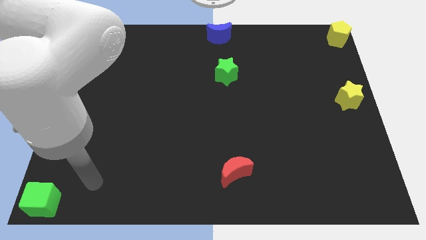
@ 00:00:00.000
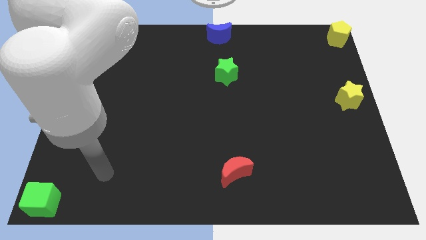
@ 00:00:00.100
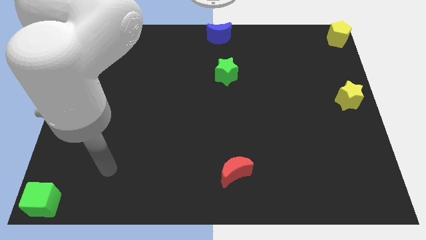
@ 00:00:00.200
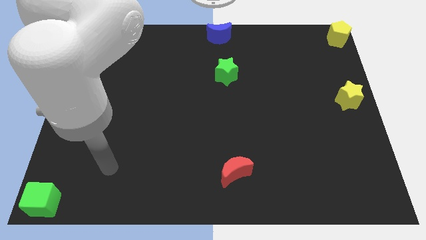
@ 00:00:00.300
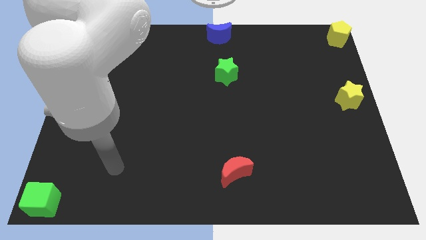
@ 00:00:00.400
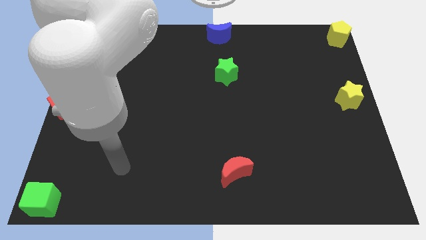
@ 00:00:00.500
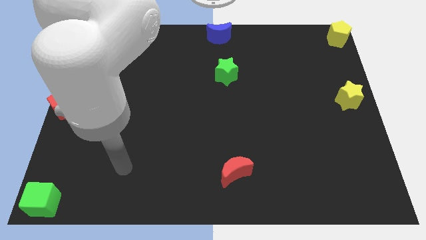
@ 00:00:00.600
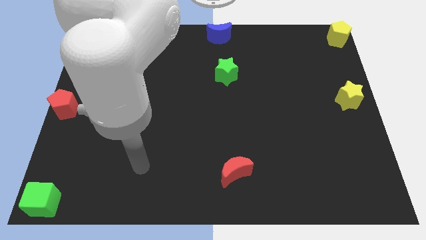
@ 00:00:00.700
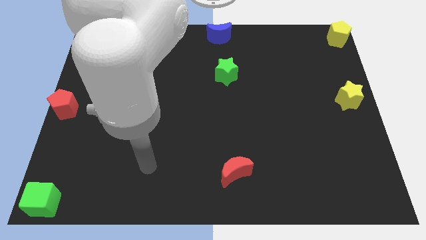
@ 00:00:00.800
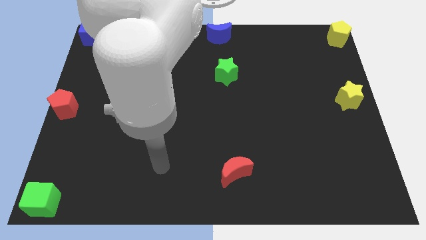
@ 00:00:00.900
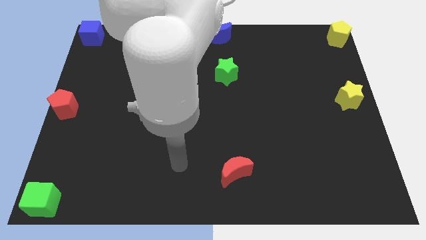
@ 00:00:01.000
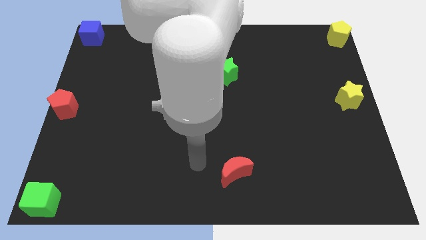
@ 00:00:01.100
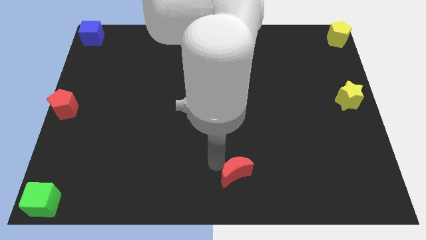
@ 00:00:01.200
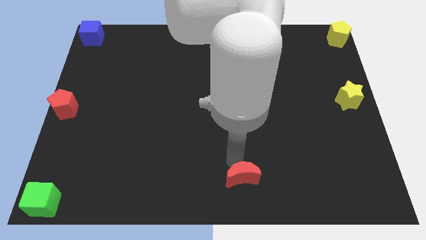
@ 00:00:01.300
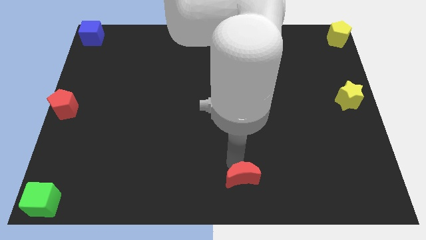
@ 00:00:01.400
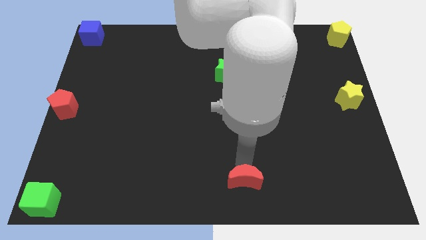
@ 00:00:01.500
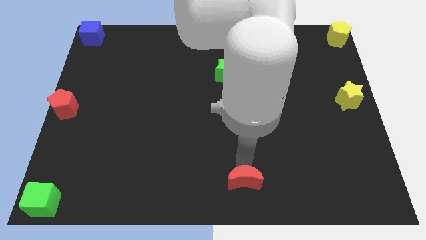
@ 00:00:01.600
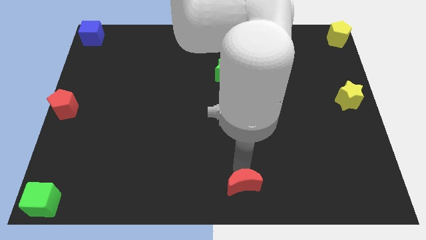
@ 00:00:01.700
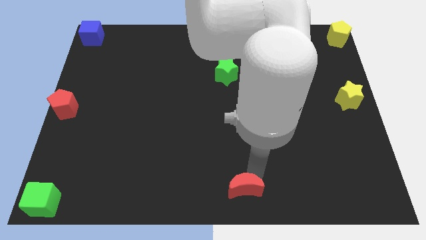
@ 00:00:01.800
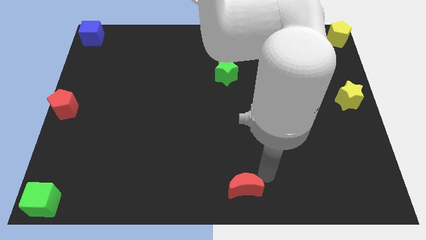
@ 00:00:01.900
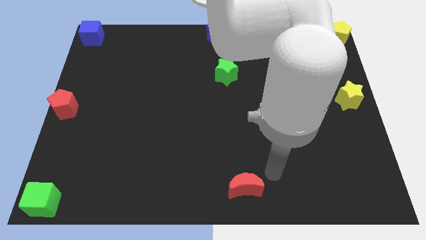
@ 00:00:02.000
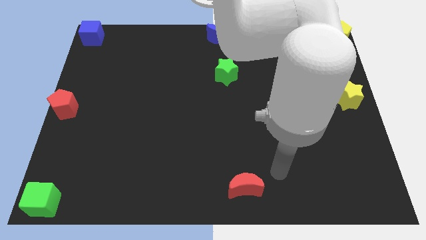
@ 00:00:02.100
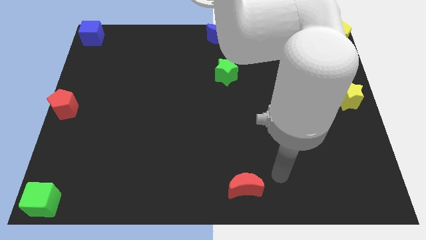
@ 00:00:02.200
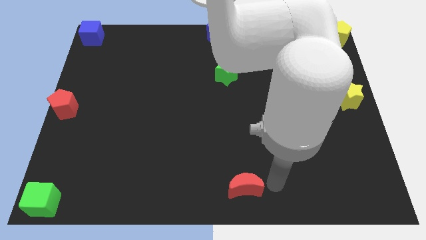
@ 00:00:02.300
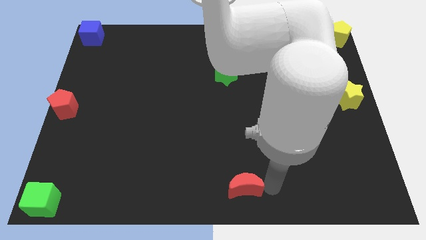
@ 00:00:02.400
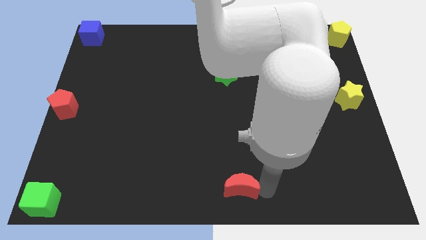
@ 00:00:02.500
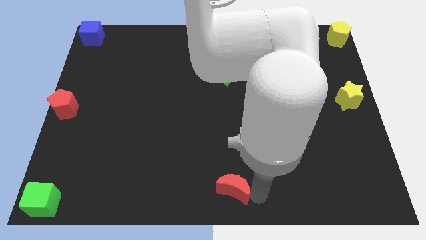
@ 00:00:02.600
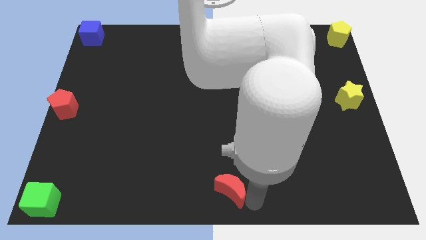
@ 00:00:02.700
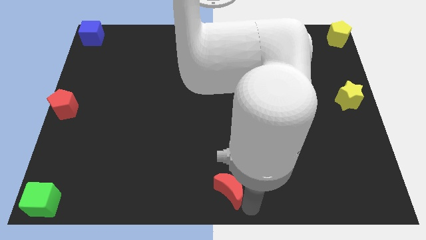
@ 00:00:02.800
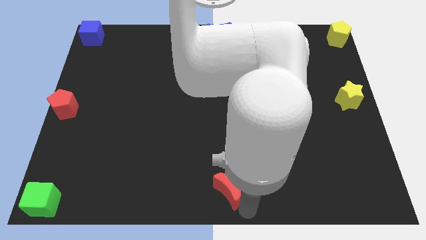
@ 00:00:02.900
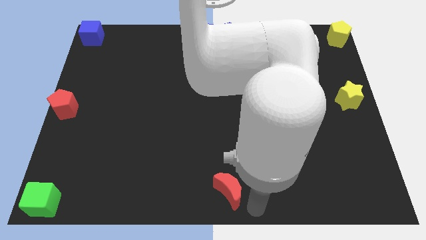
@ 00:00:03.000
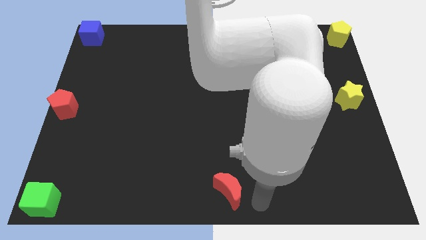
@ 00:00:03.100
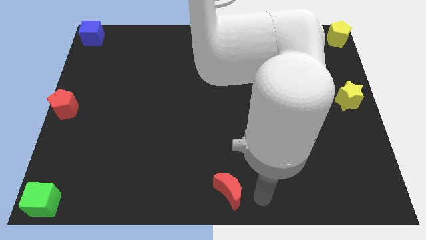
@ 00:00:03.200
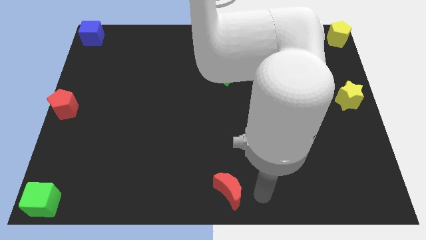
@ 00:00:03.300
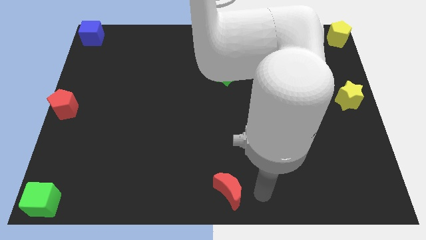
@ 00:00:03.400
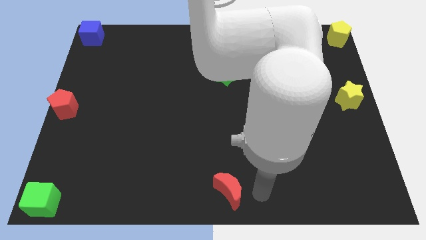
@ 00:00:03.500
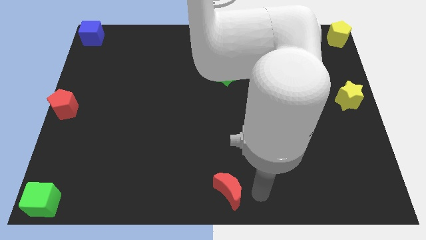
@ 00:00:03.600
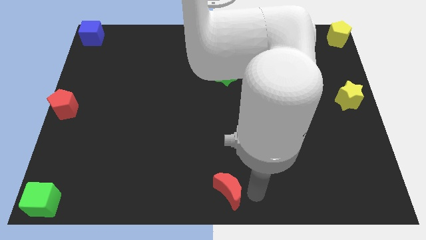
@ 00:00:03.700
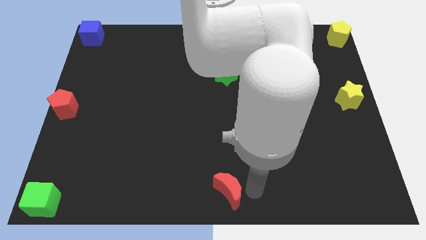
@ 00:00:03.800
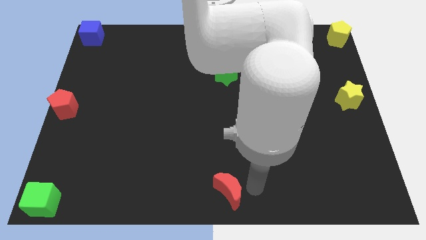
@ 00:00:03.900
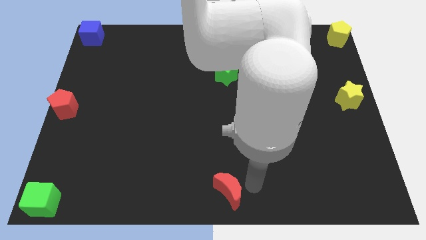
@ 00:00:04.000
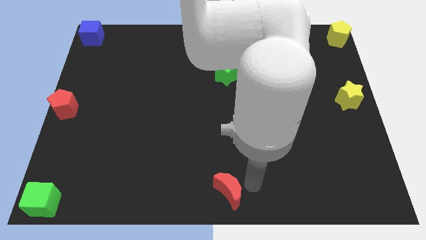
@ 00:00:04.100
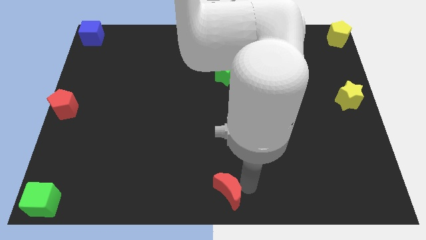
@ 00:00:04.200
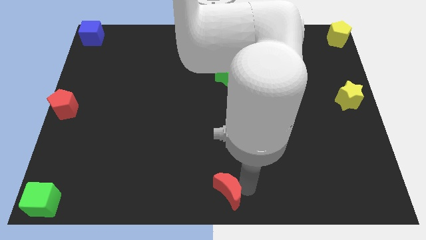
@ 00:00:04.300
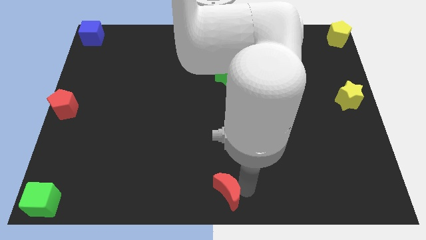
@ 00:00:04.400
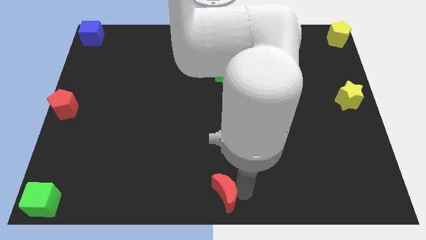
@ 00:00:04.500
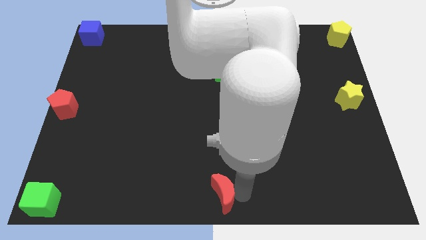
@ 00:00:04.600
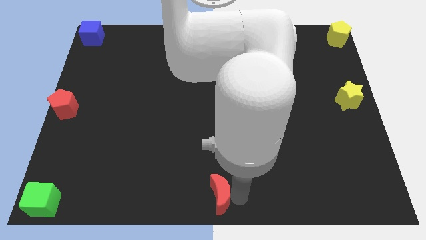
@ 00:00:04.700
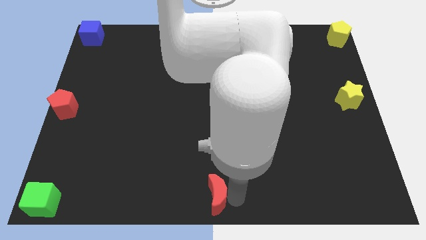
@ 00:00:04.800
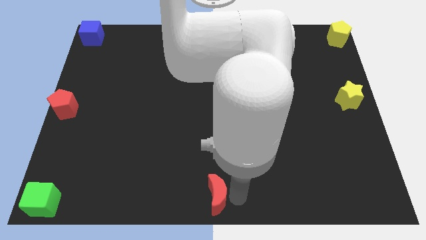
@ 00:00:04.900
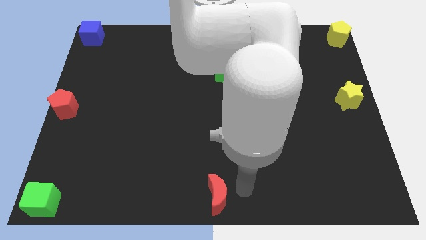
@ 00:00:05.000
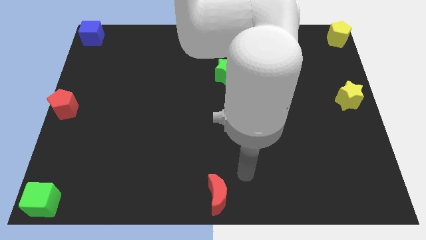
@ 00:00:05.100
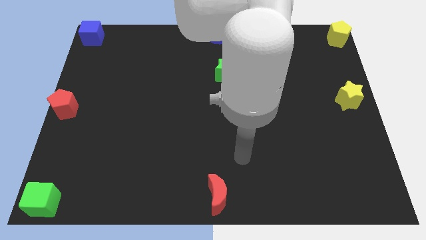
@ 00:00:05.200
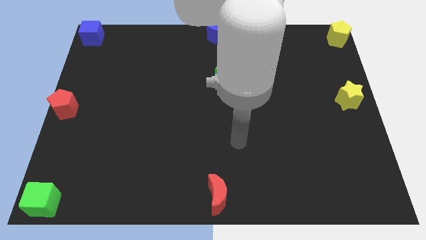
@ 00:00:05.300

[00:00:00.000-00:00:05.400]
place the red moon to the bottom center of the board

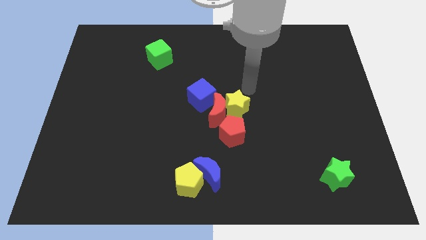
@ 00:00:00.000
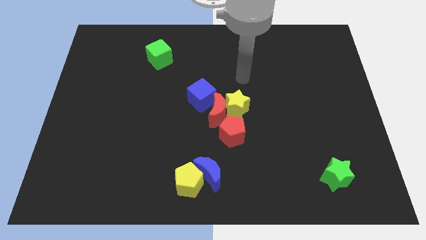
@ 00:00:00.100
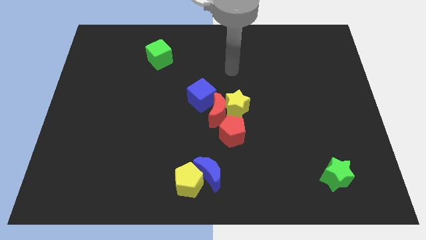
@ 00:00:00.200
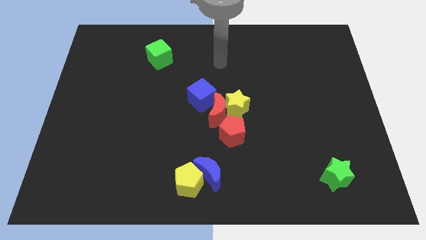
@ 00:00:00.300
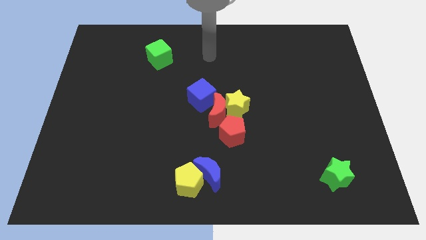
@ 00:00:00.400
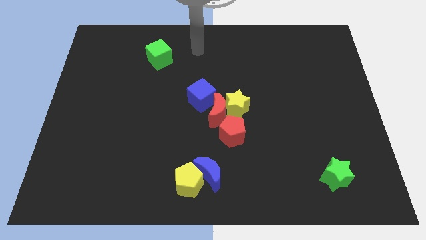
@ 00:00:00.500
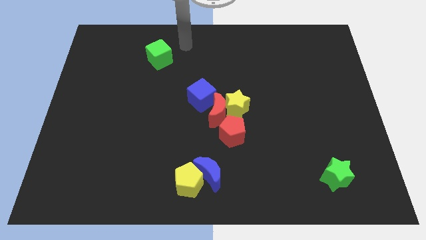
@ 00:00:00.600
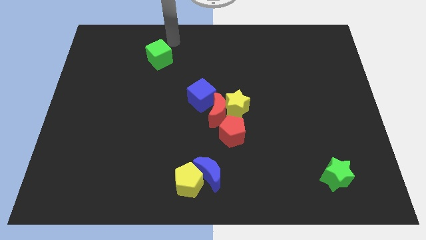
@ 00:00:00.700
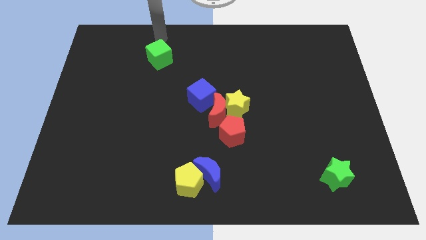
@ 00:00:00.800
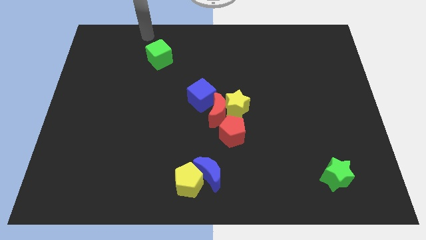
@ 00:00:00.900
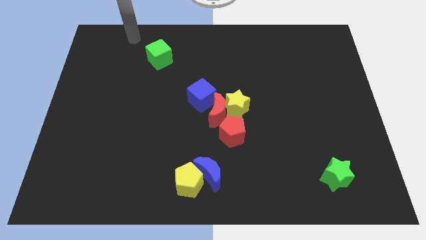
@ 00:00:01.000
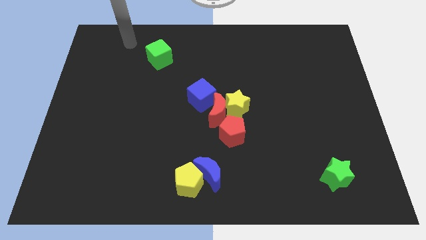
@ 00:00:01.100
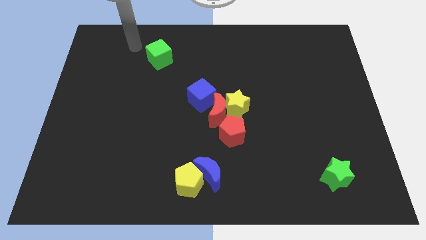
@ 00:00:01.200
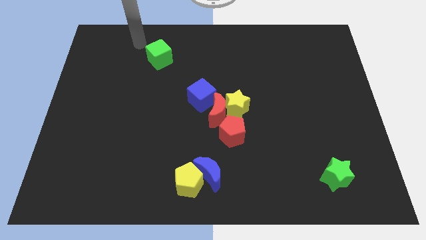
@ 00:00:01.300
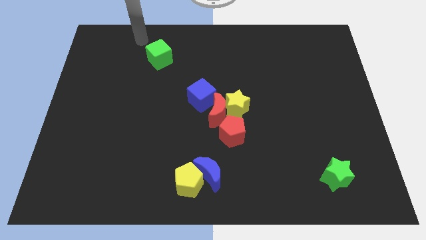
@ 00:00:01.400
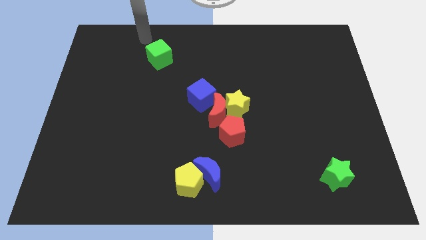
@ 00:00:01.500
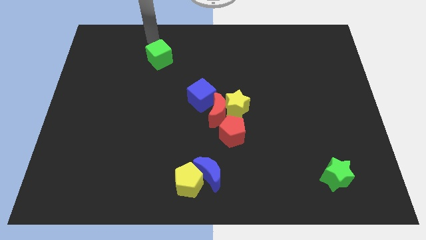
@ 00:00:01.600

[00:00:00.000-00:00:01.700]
move your arm above to the green star

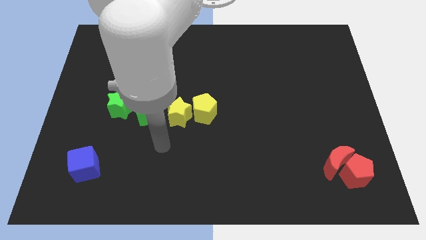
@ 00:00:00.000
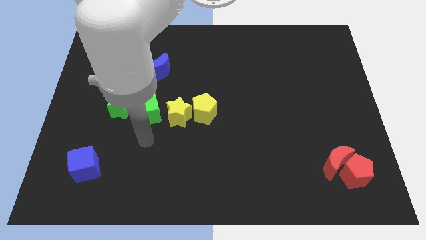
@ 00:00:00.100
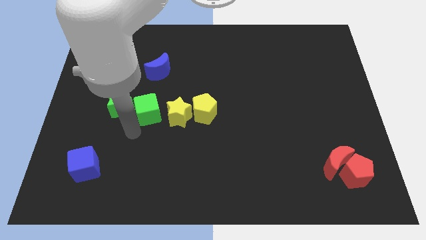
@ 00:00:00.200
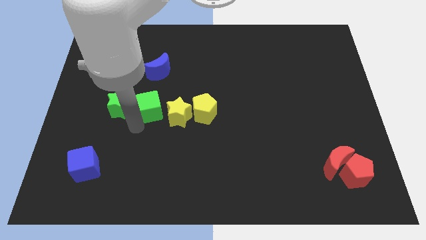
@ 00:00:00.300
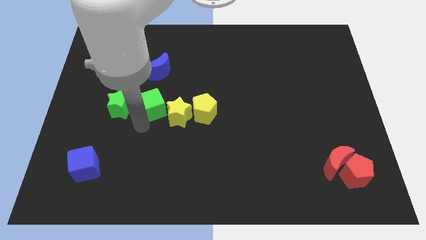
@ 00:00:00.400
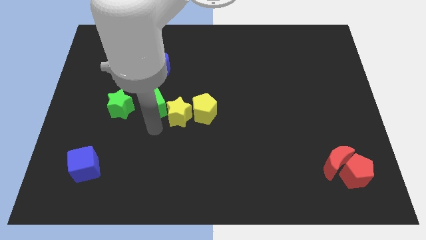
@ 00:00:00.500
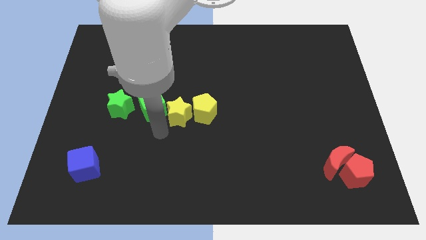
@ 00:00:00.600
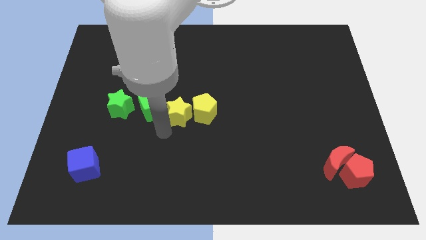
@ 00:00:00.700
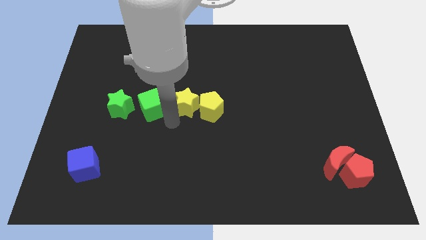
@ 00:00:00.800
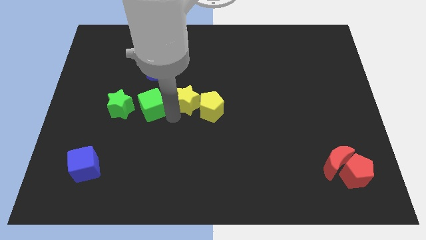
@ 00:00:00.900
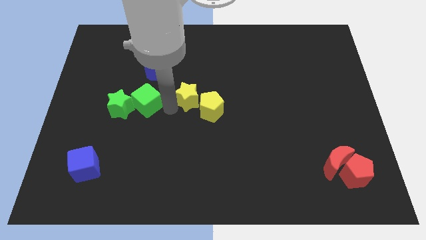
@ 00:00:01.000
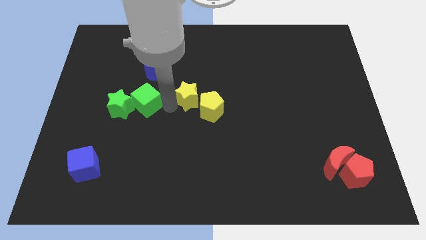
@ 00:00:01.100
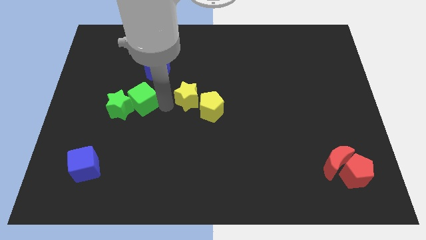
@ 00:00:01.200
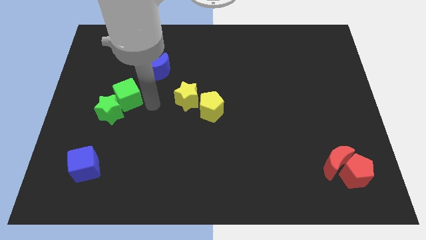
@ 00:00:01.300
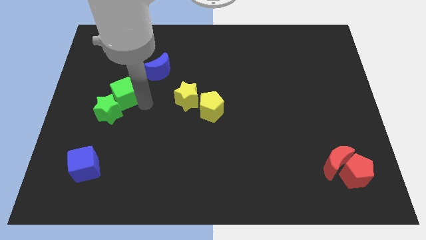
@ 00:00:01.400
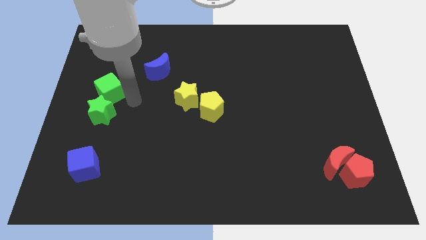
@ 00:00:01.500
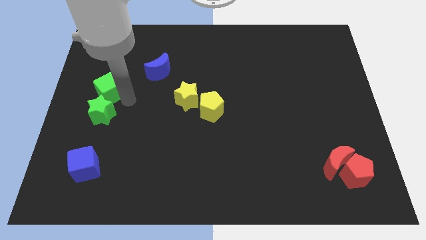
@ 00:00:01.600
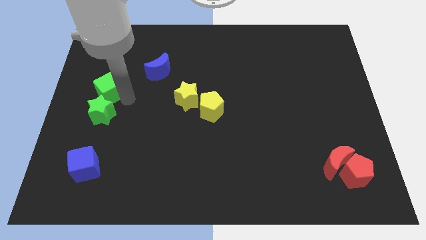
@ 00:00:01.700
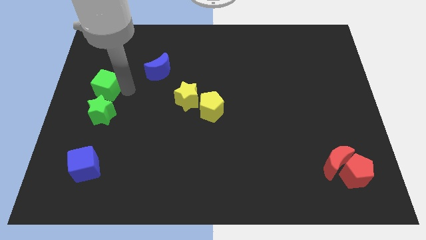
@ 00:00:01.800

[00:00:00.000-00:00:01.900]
separate yellow star and green cube from each other
